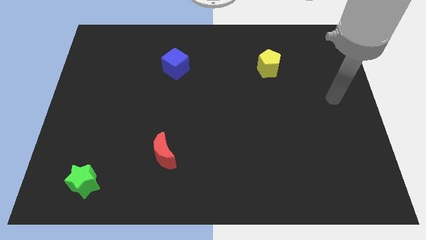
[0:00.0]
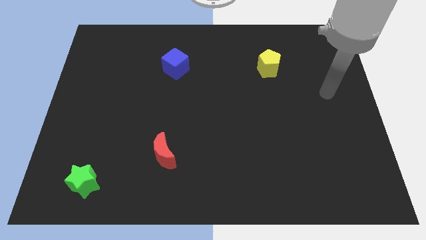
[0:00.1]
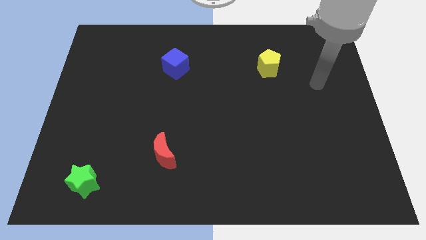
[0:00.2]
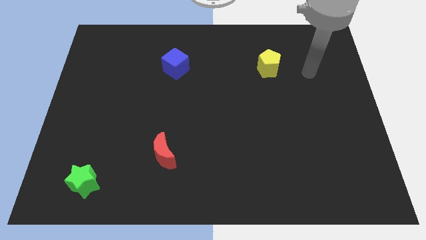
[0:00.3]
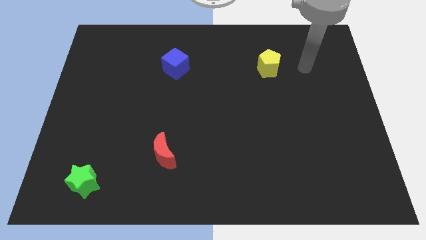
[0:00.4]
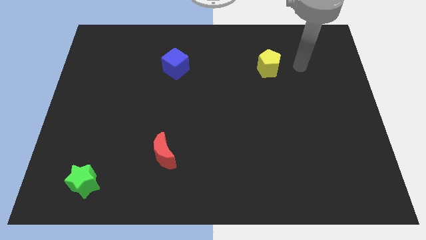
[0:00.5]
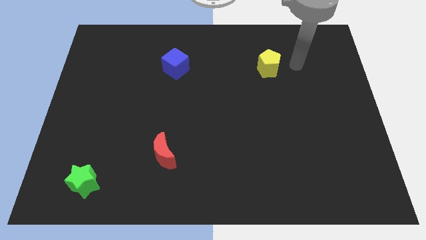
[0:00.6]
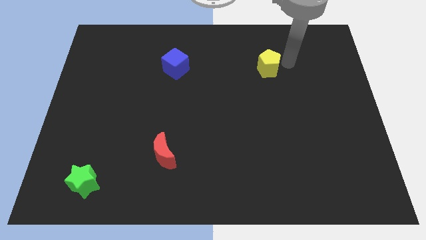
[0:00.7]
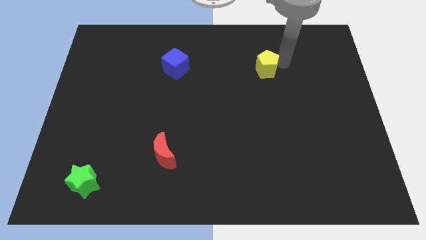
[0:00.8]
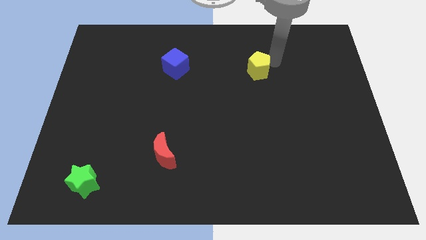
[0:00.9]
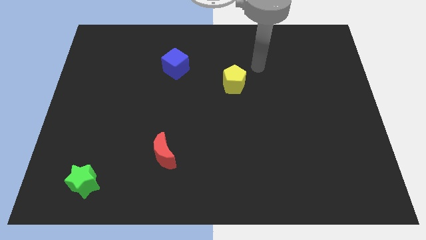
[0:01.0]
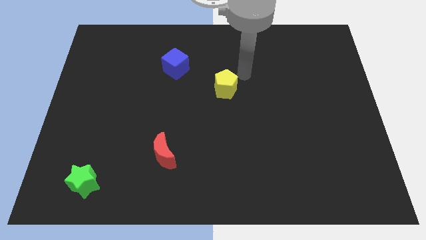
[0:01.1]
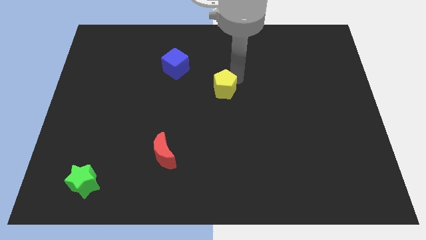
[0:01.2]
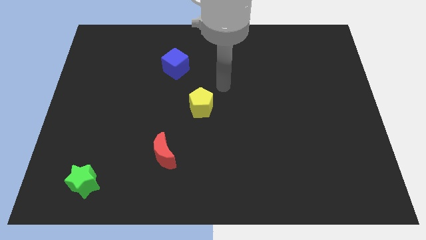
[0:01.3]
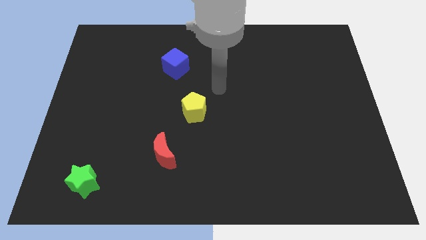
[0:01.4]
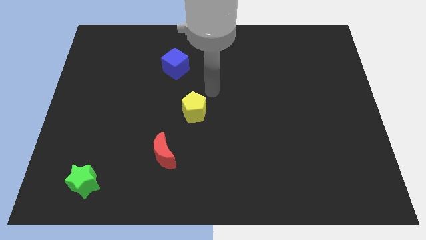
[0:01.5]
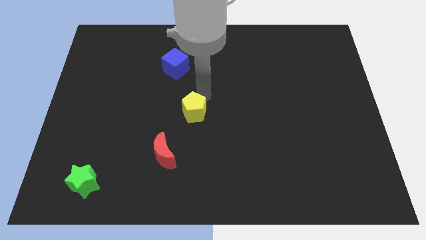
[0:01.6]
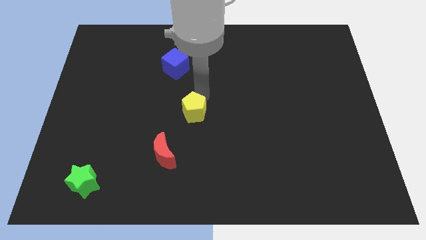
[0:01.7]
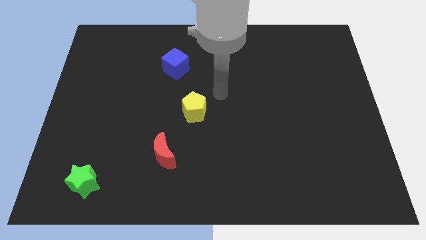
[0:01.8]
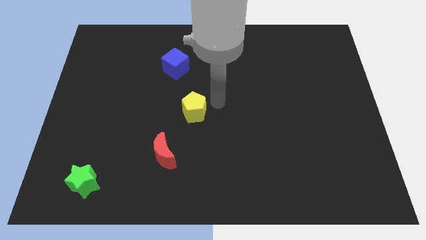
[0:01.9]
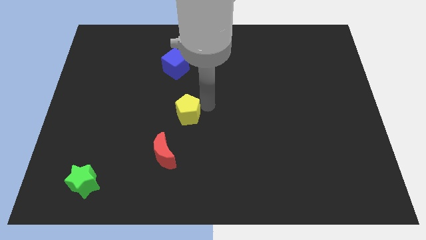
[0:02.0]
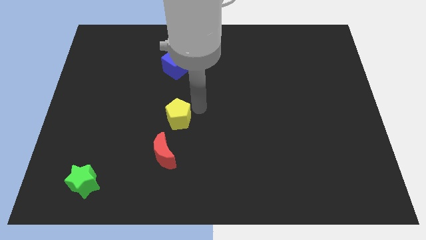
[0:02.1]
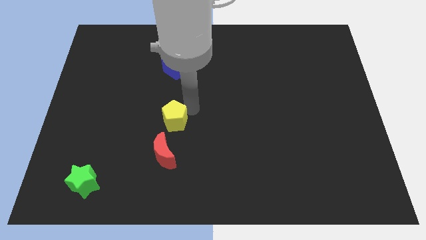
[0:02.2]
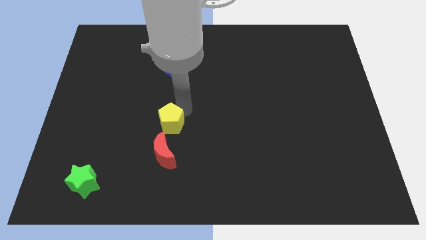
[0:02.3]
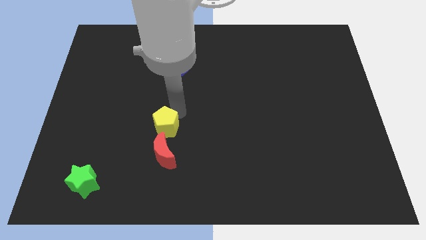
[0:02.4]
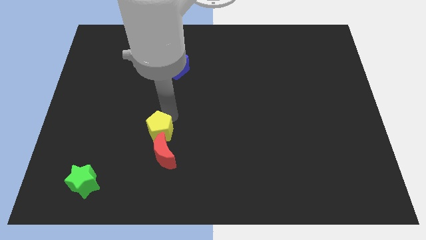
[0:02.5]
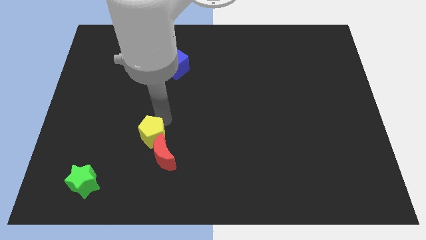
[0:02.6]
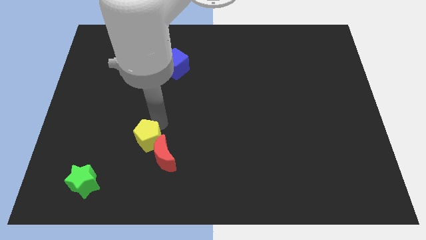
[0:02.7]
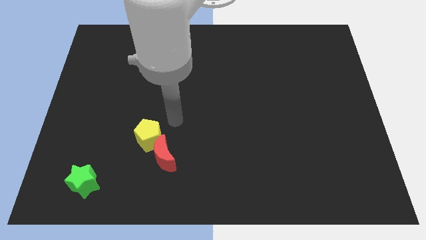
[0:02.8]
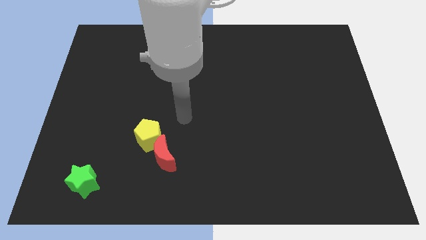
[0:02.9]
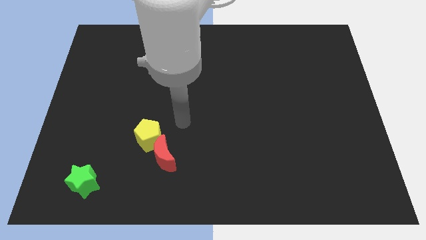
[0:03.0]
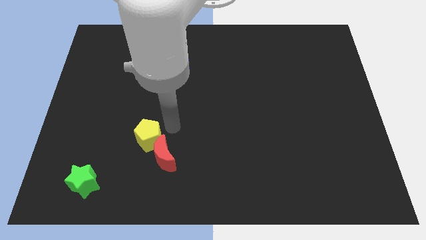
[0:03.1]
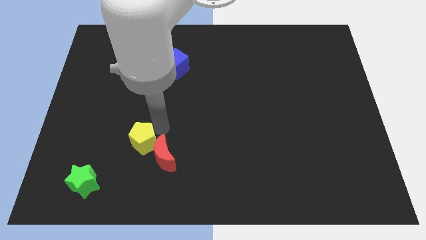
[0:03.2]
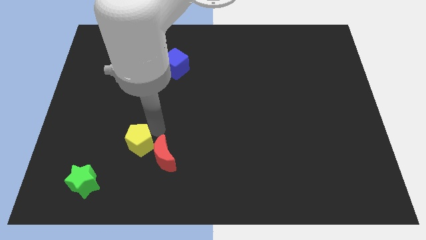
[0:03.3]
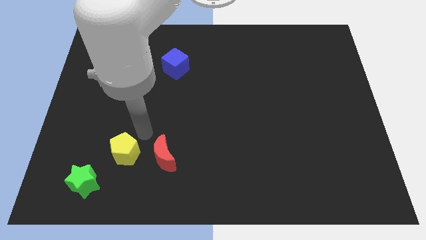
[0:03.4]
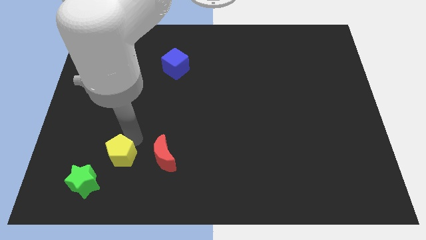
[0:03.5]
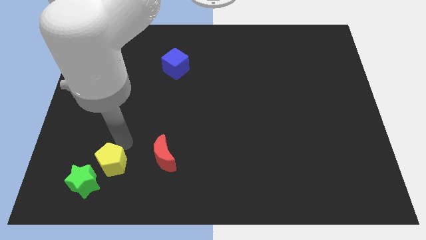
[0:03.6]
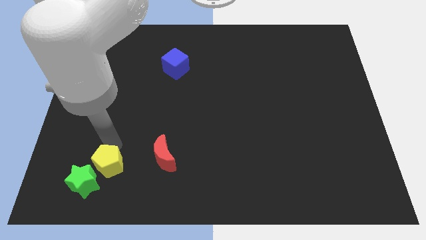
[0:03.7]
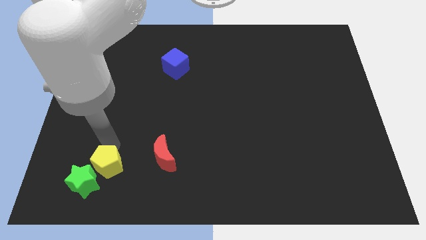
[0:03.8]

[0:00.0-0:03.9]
slide the pentagon close to the star

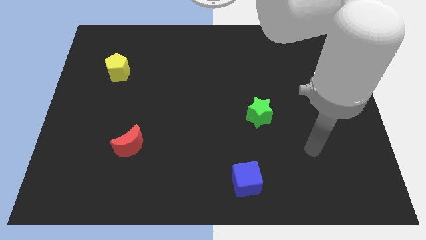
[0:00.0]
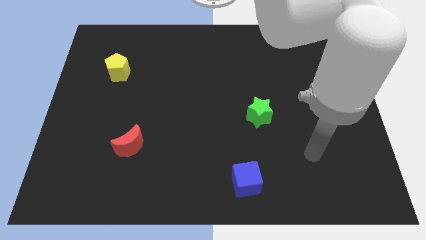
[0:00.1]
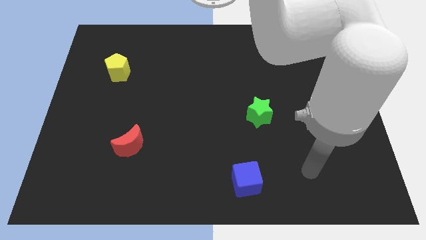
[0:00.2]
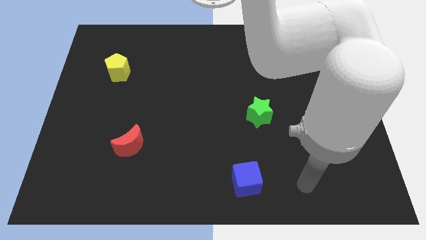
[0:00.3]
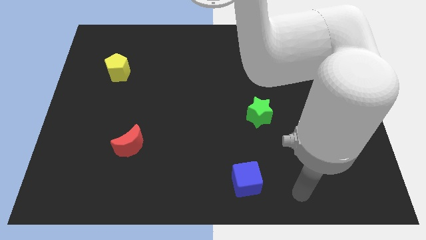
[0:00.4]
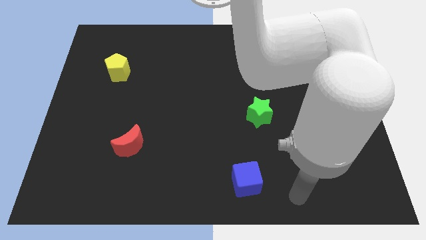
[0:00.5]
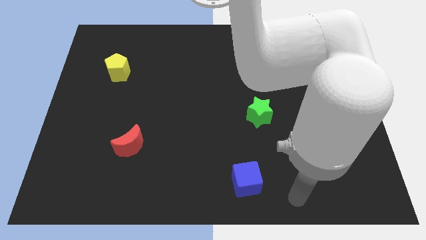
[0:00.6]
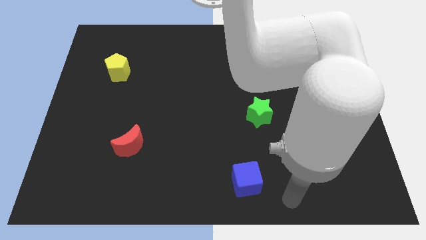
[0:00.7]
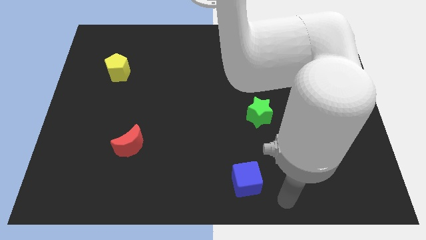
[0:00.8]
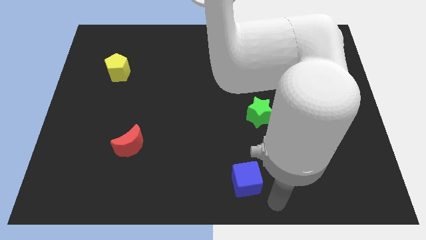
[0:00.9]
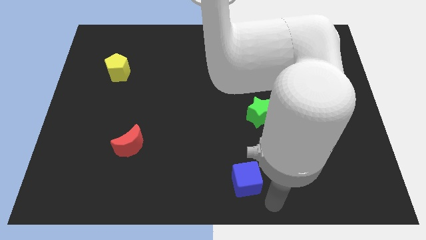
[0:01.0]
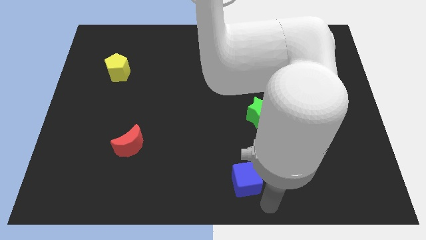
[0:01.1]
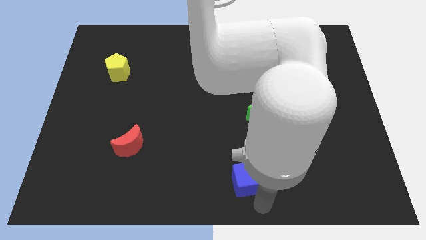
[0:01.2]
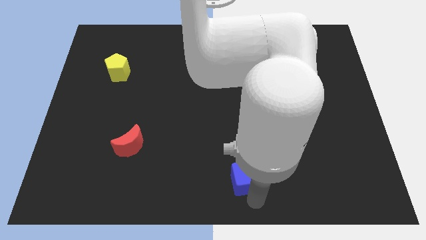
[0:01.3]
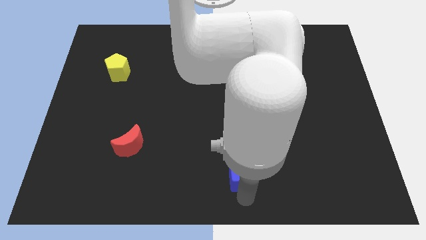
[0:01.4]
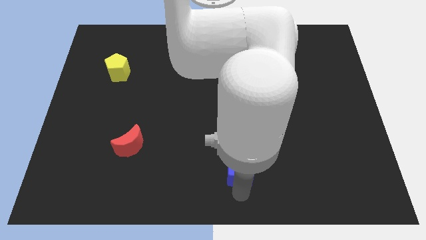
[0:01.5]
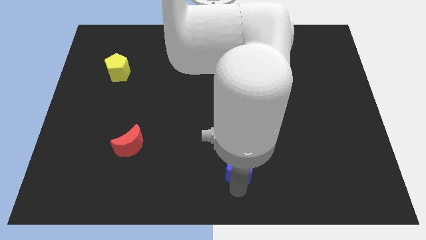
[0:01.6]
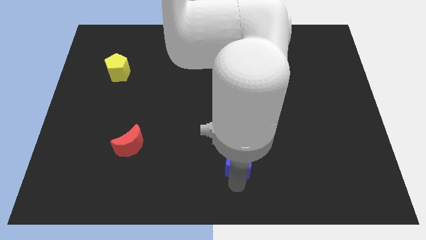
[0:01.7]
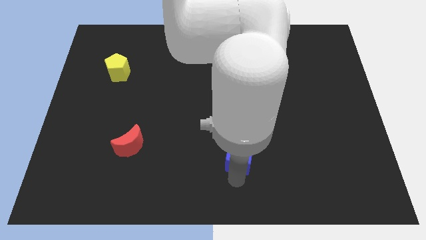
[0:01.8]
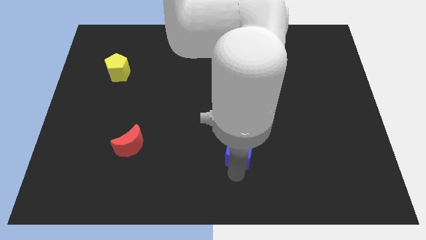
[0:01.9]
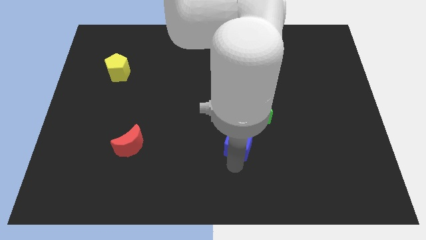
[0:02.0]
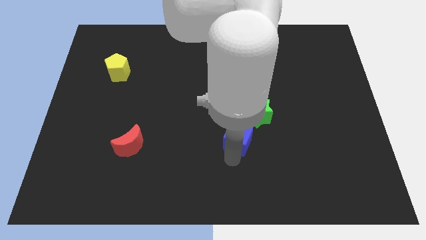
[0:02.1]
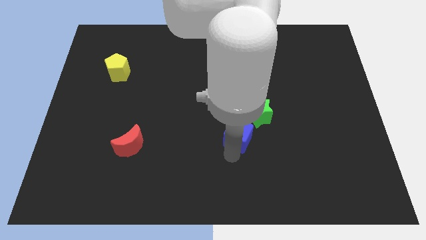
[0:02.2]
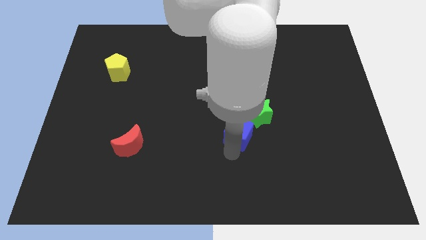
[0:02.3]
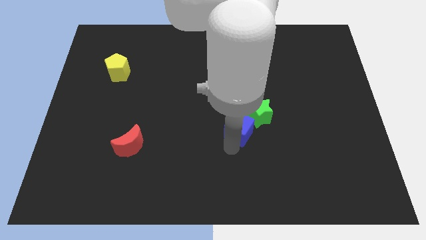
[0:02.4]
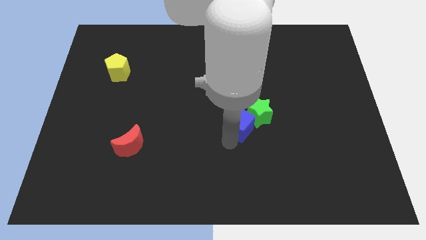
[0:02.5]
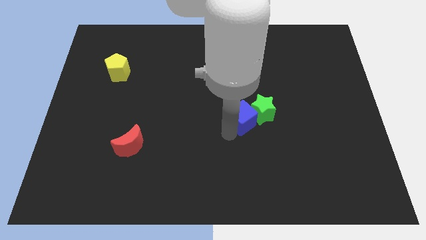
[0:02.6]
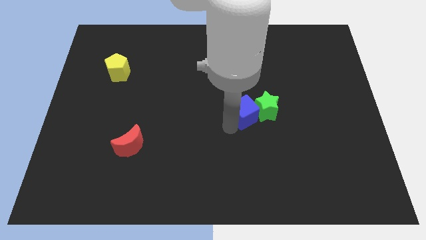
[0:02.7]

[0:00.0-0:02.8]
move the blue cube close to the green block

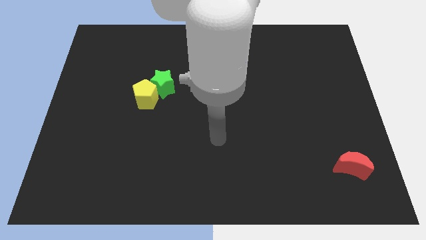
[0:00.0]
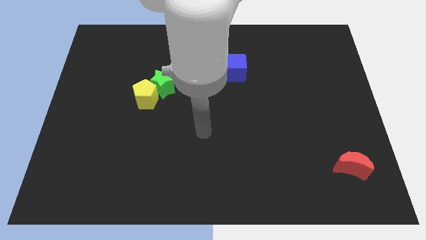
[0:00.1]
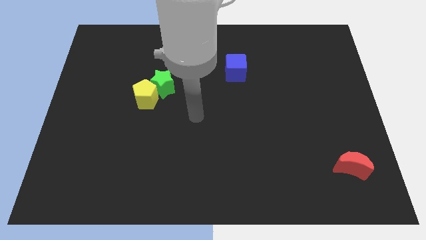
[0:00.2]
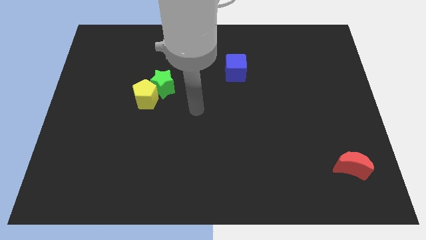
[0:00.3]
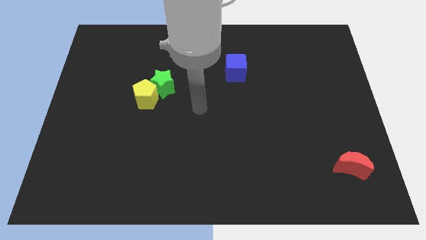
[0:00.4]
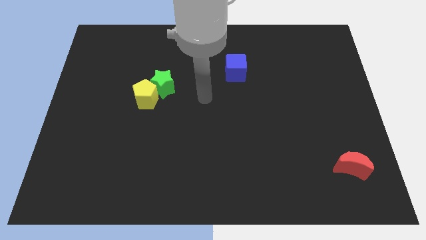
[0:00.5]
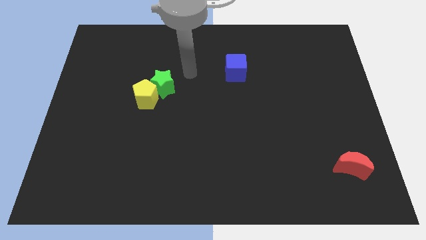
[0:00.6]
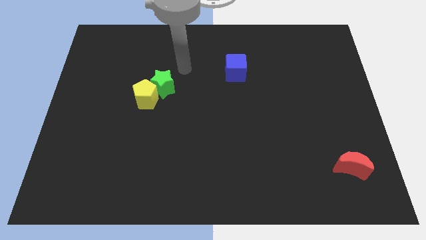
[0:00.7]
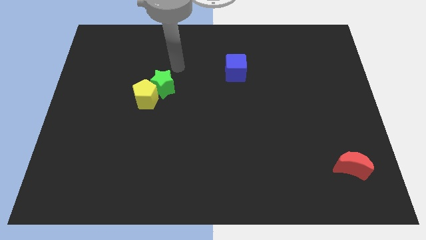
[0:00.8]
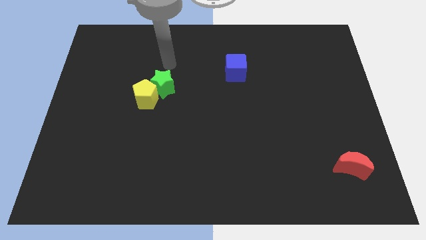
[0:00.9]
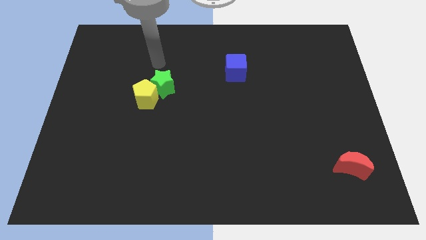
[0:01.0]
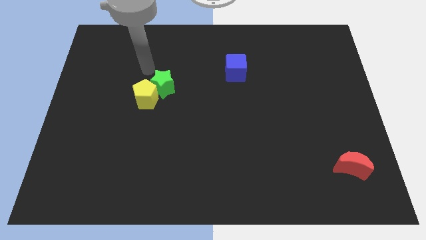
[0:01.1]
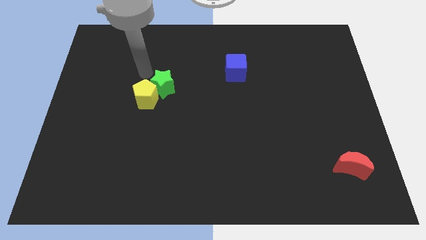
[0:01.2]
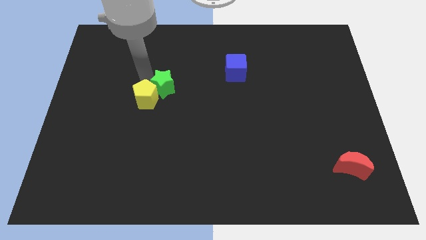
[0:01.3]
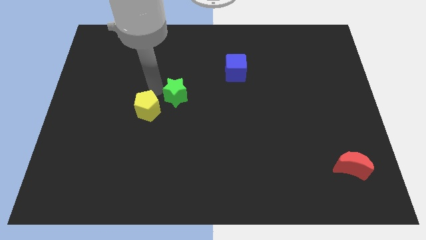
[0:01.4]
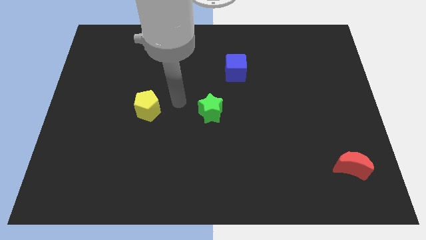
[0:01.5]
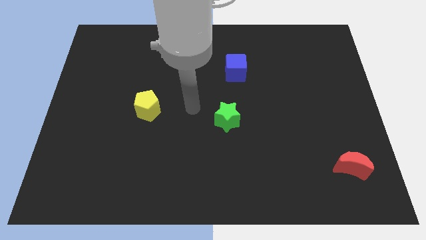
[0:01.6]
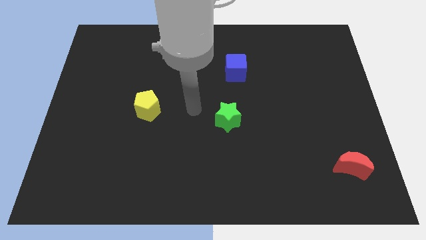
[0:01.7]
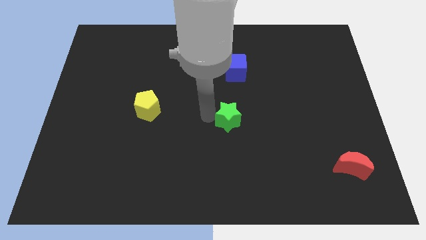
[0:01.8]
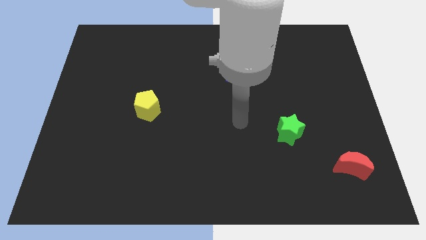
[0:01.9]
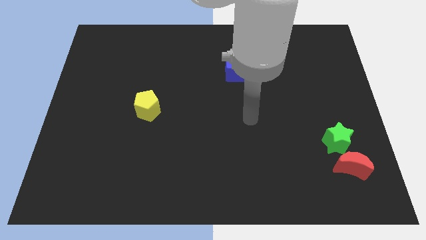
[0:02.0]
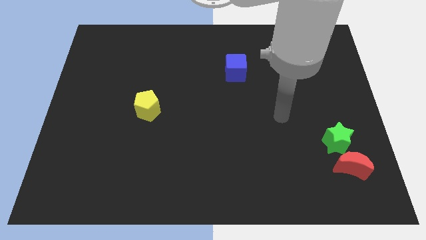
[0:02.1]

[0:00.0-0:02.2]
push the green block to the red moon
